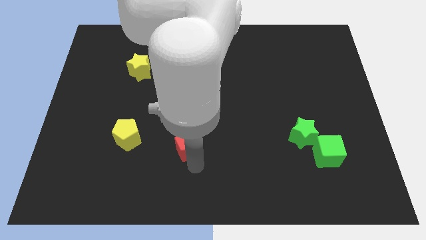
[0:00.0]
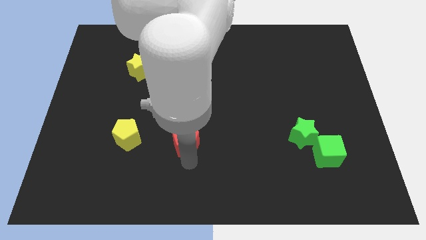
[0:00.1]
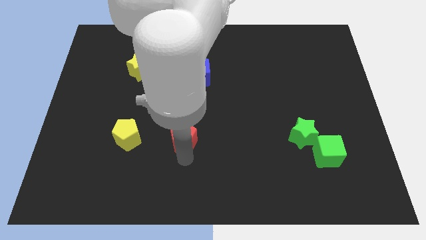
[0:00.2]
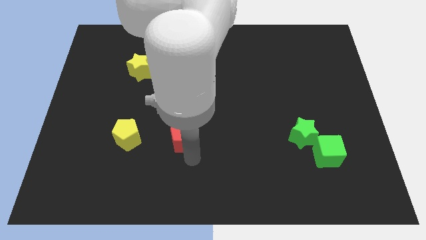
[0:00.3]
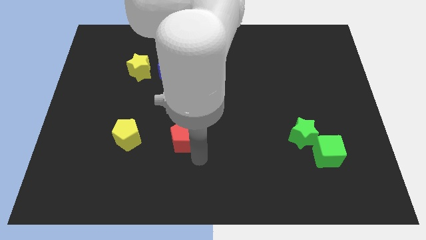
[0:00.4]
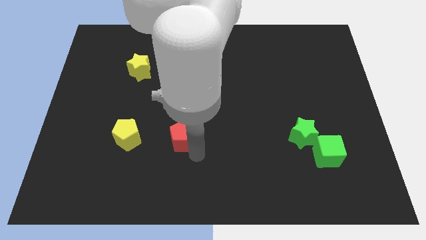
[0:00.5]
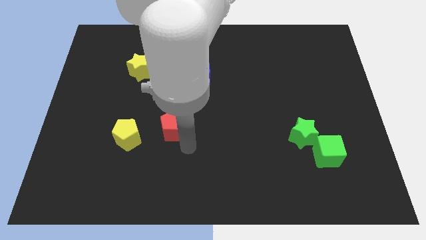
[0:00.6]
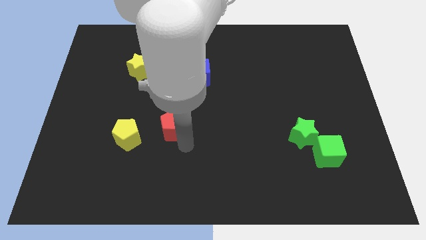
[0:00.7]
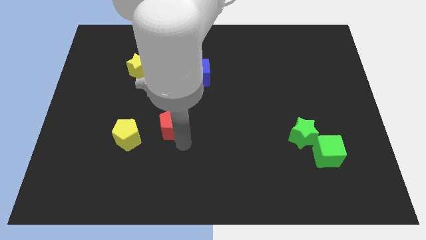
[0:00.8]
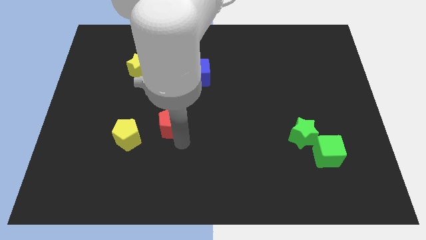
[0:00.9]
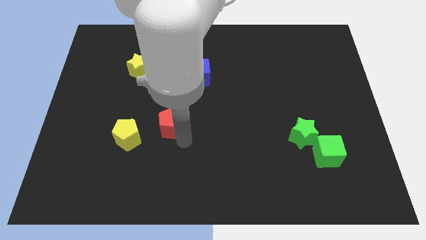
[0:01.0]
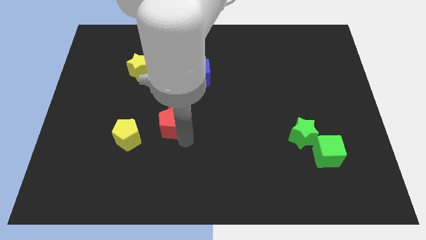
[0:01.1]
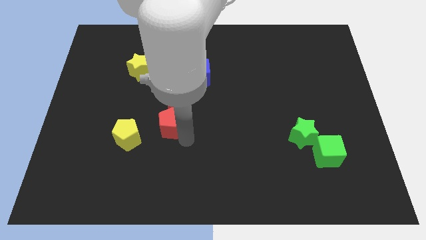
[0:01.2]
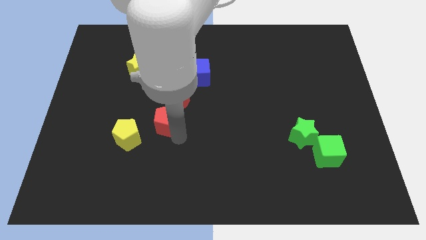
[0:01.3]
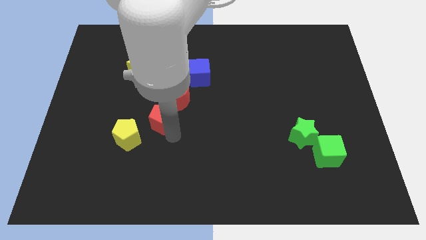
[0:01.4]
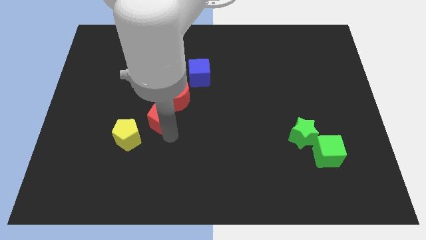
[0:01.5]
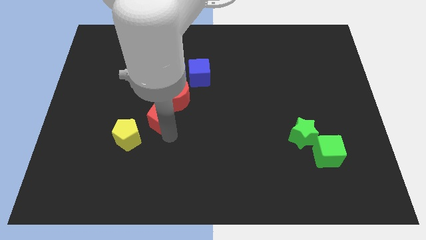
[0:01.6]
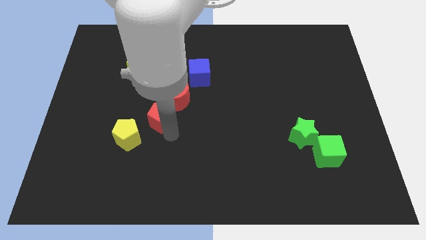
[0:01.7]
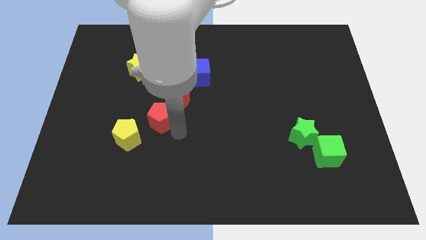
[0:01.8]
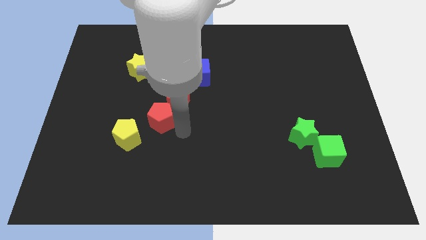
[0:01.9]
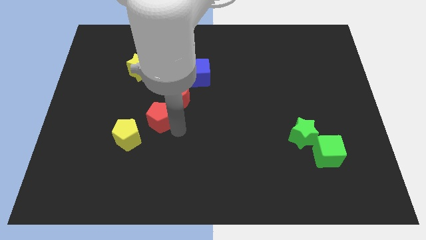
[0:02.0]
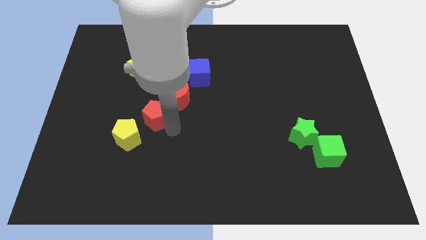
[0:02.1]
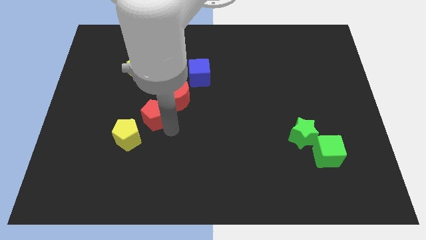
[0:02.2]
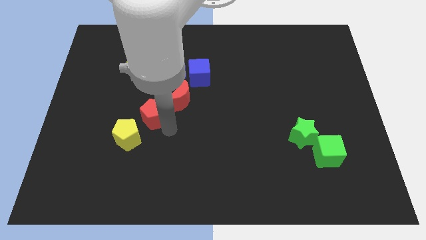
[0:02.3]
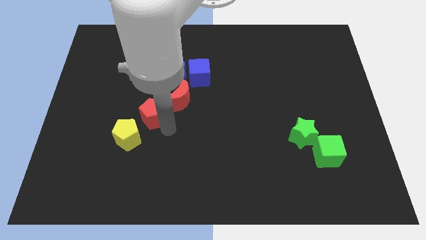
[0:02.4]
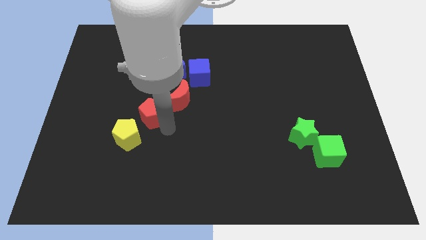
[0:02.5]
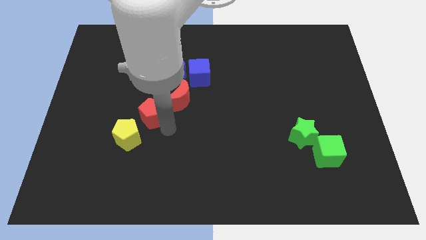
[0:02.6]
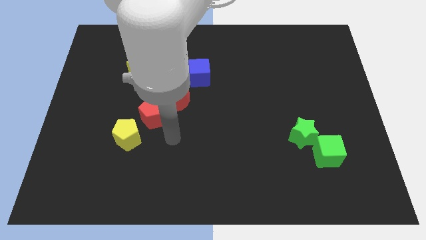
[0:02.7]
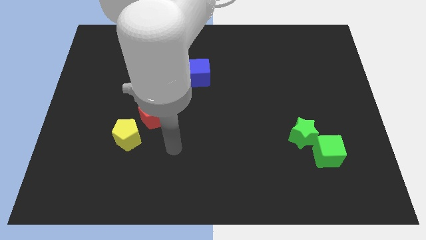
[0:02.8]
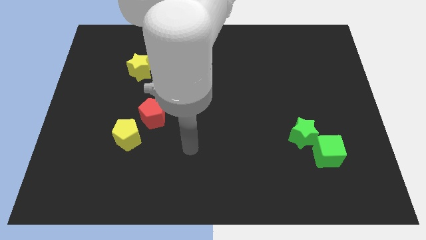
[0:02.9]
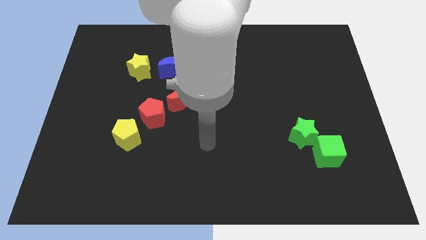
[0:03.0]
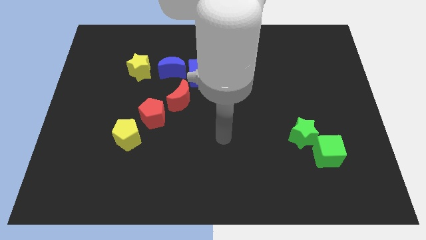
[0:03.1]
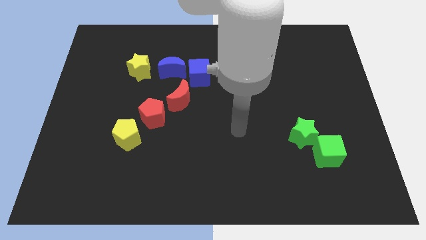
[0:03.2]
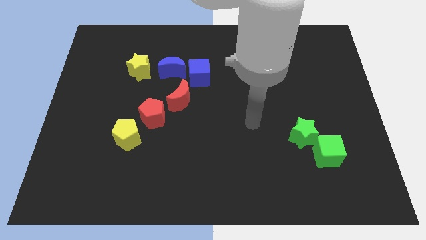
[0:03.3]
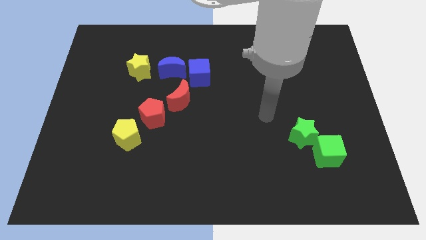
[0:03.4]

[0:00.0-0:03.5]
place red pentagon between red moon and yellow pentagon

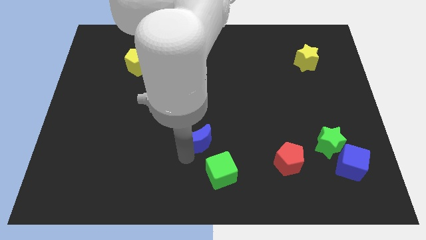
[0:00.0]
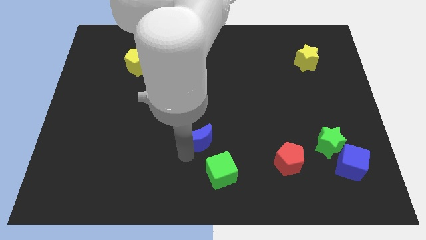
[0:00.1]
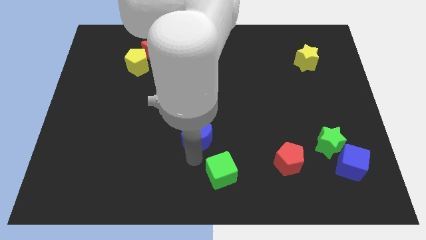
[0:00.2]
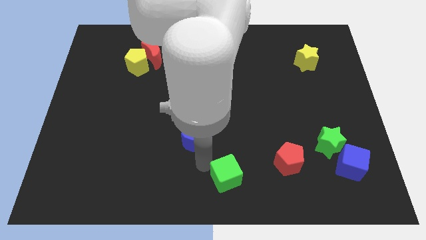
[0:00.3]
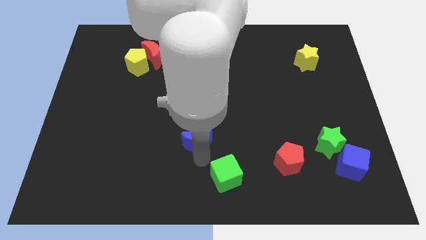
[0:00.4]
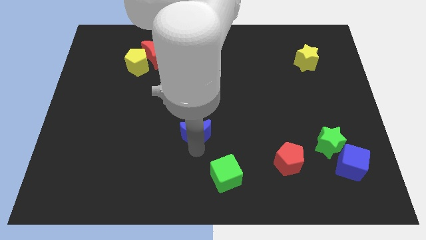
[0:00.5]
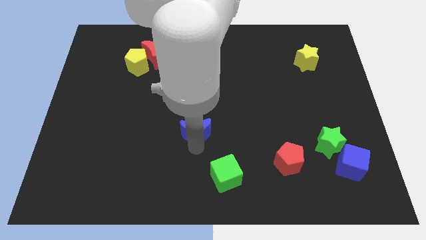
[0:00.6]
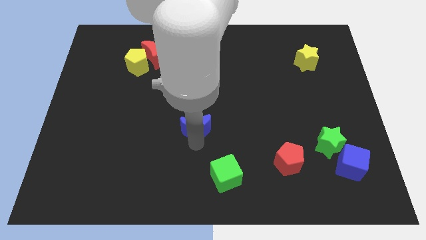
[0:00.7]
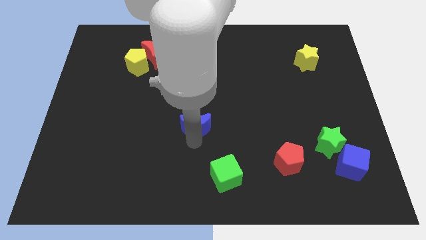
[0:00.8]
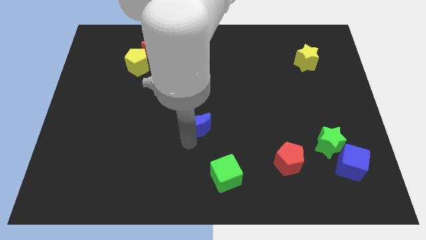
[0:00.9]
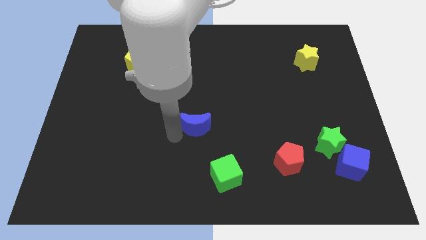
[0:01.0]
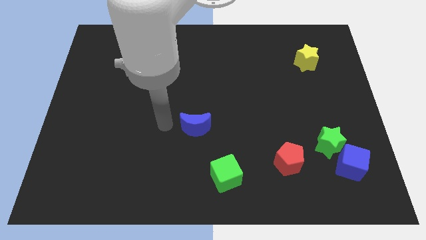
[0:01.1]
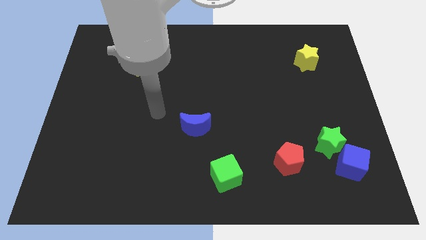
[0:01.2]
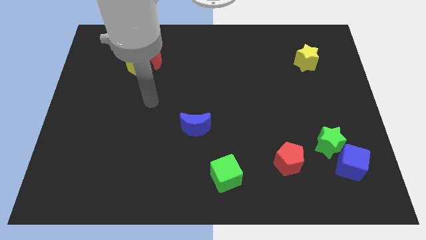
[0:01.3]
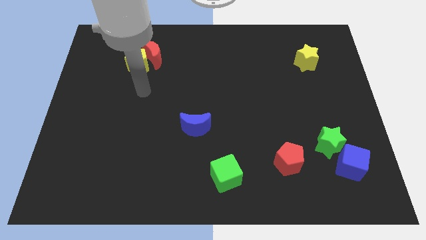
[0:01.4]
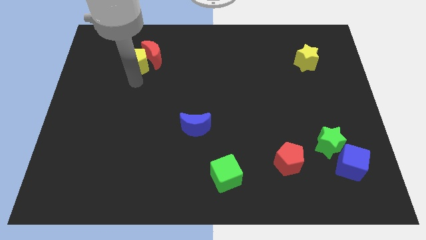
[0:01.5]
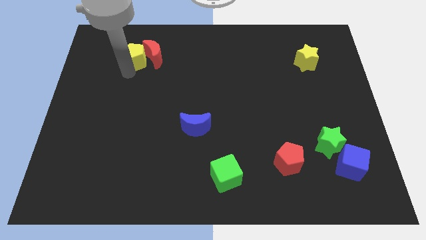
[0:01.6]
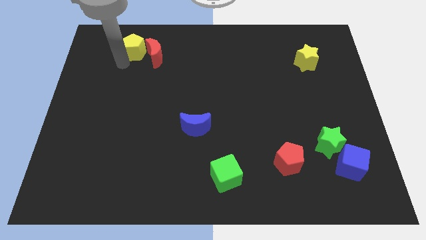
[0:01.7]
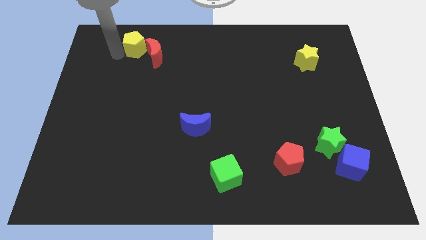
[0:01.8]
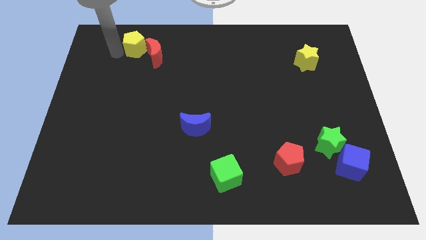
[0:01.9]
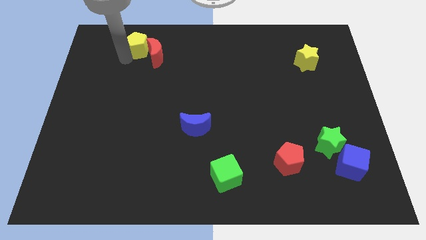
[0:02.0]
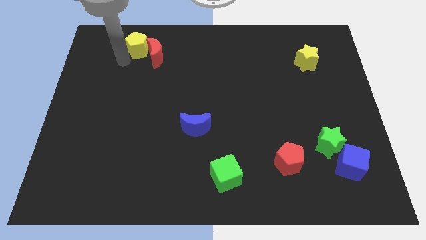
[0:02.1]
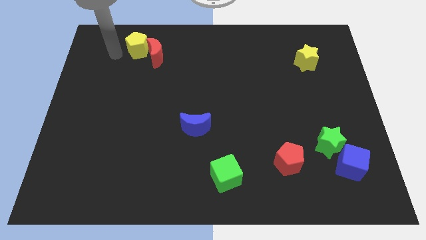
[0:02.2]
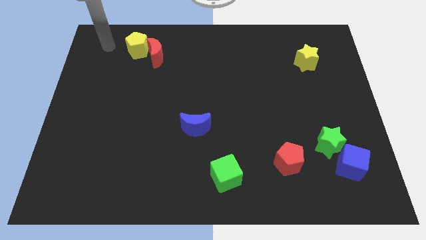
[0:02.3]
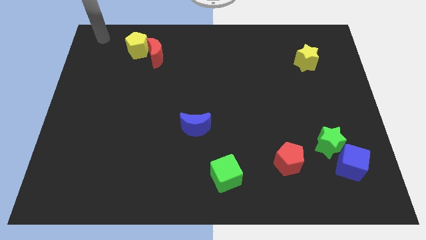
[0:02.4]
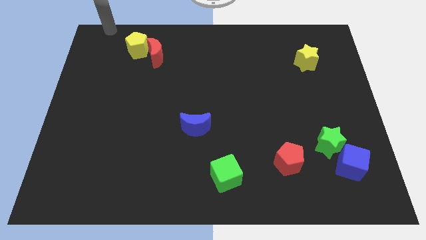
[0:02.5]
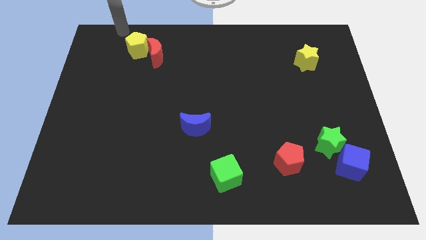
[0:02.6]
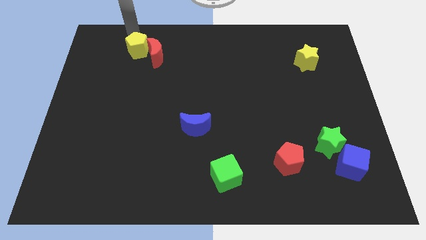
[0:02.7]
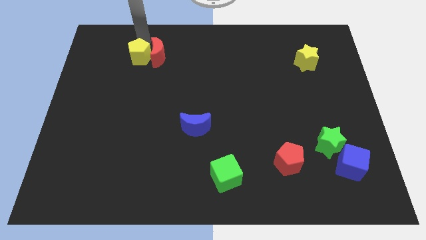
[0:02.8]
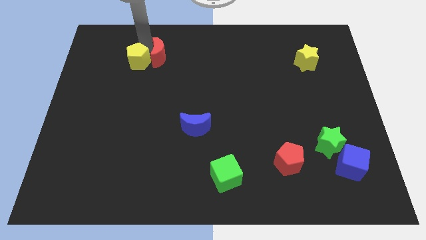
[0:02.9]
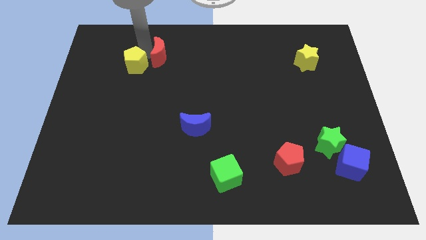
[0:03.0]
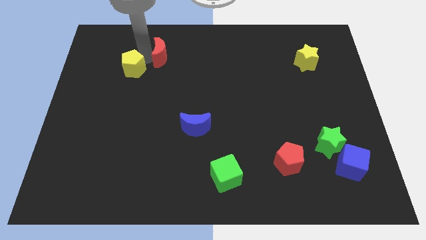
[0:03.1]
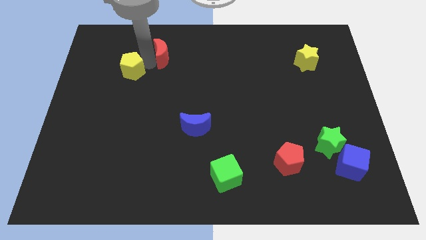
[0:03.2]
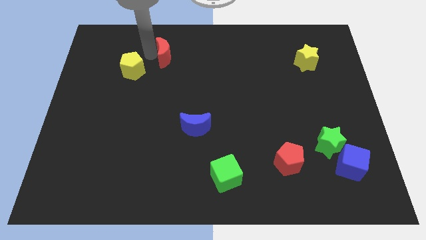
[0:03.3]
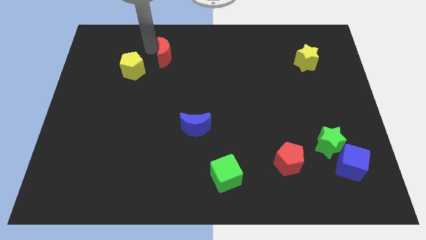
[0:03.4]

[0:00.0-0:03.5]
push red moon slightly upwards

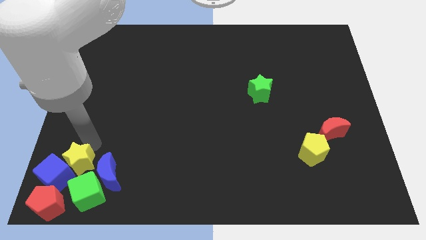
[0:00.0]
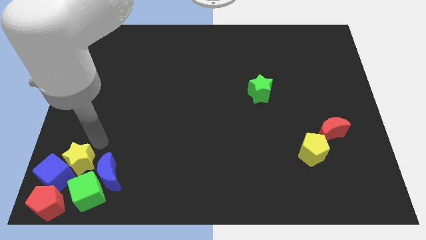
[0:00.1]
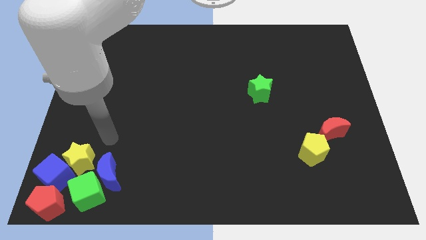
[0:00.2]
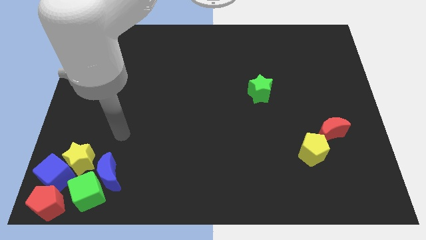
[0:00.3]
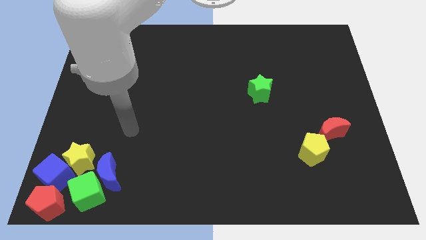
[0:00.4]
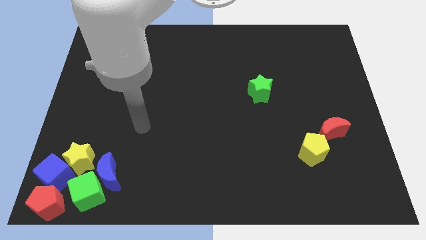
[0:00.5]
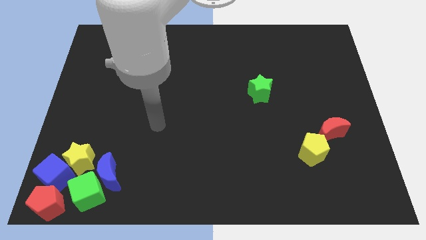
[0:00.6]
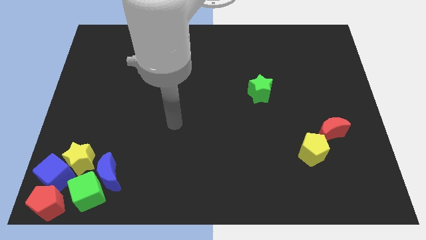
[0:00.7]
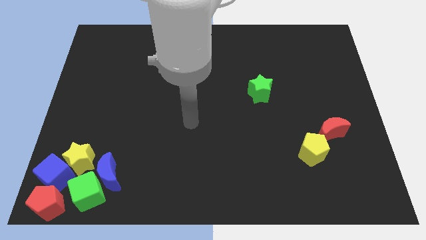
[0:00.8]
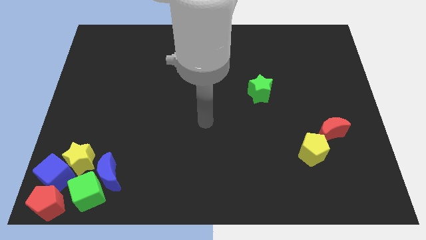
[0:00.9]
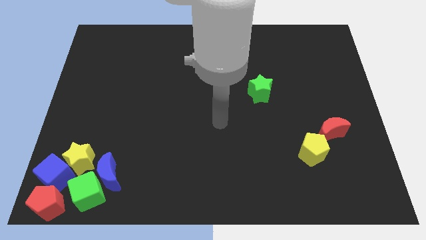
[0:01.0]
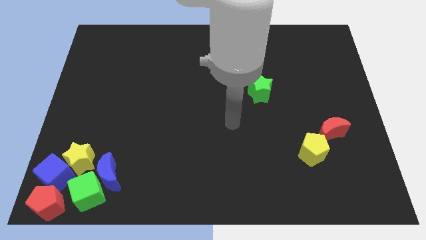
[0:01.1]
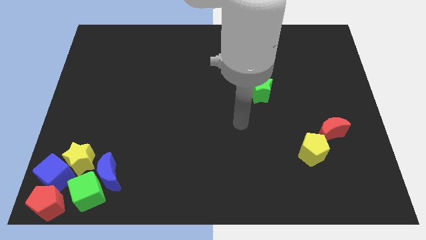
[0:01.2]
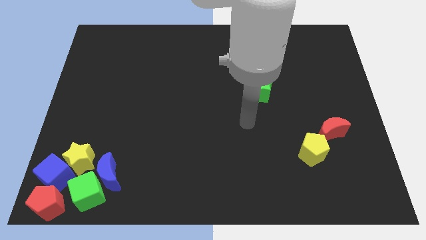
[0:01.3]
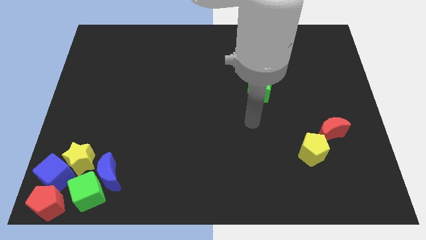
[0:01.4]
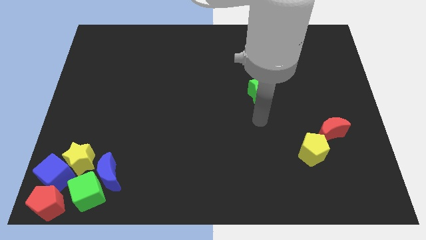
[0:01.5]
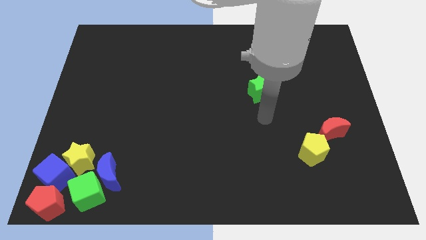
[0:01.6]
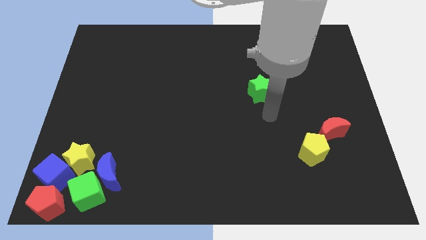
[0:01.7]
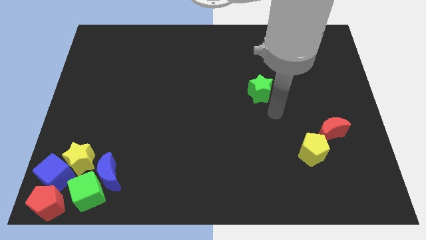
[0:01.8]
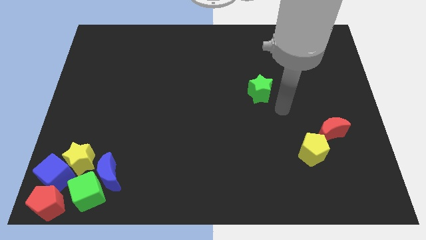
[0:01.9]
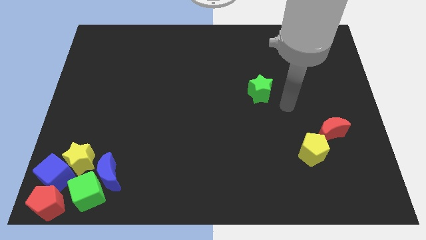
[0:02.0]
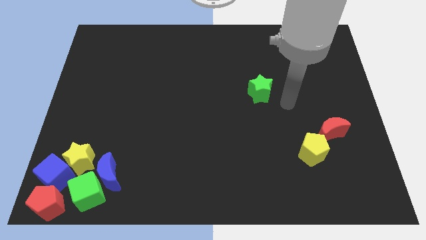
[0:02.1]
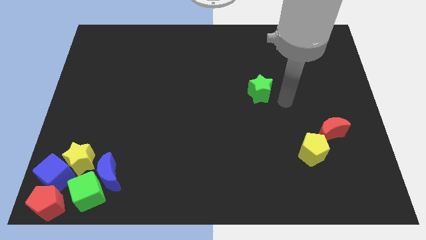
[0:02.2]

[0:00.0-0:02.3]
move the arm towards green star
